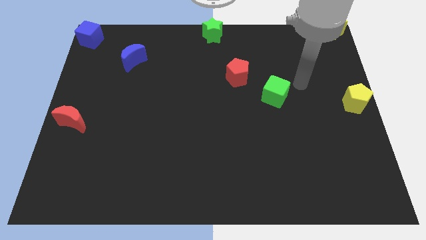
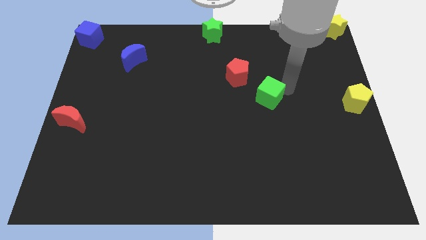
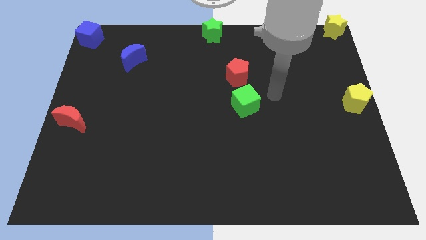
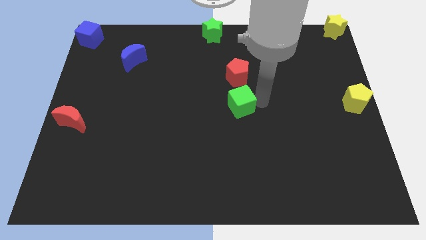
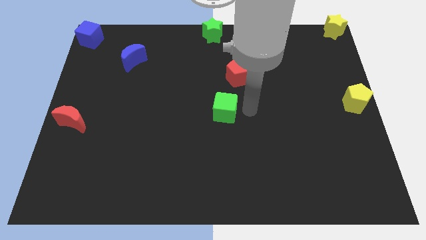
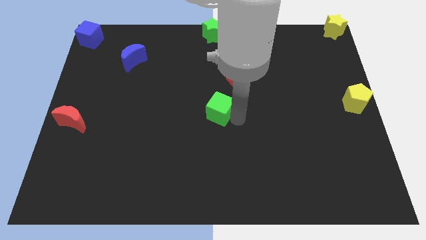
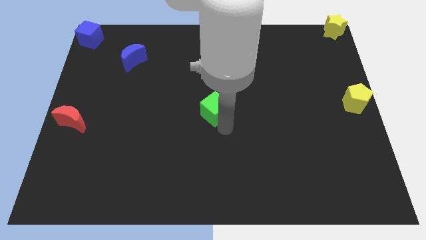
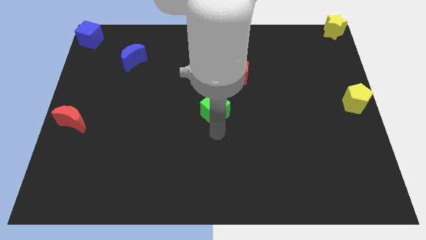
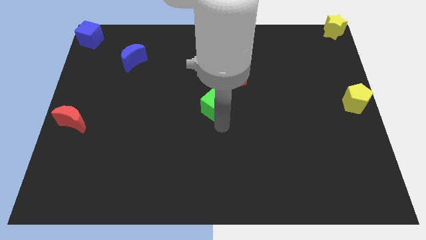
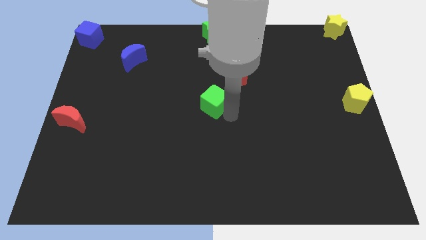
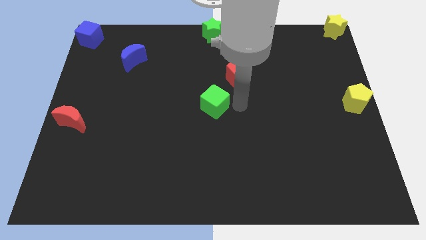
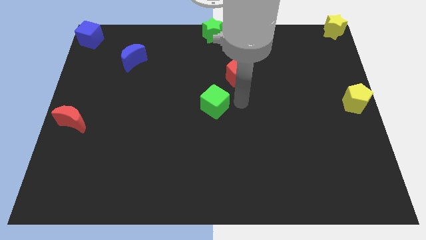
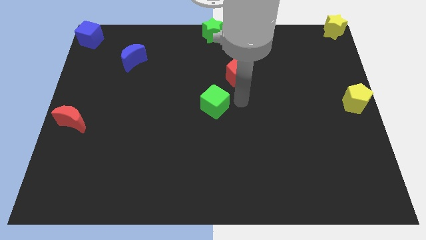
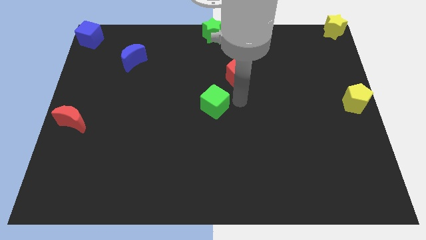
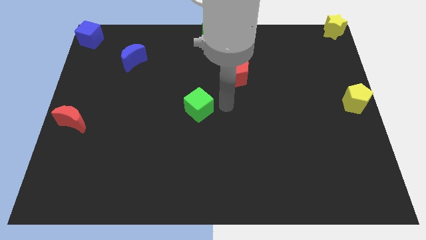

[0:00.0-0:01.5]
drag the green cube vertically to the bottom of the green star

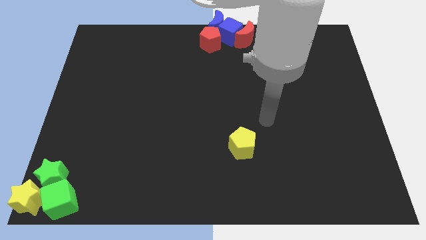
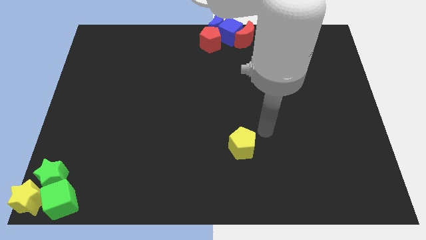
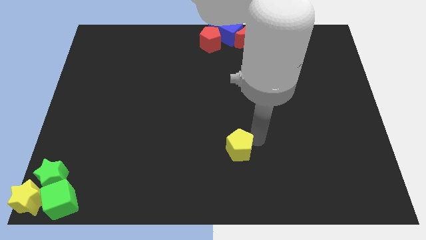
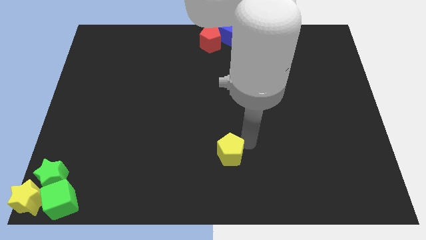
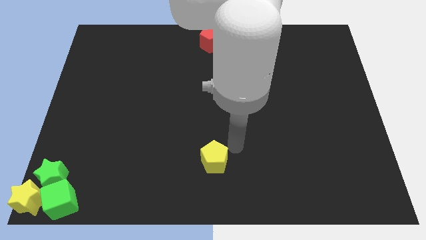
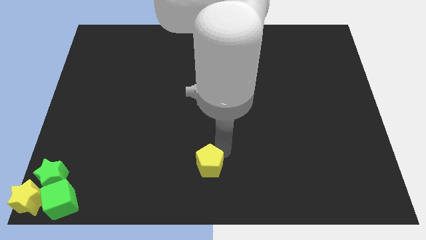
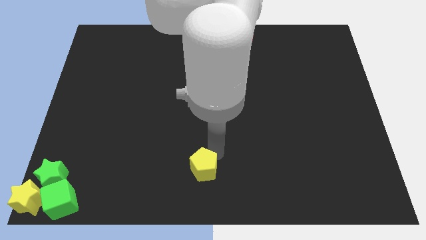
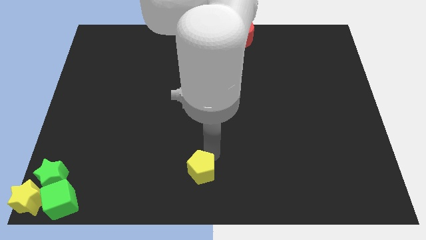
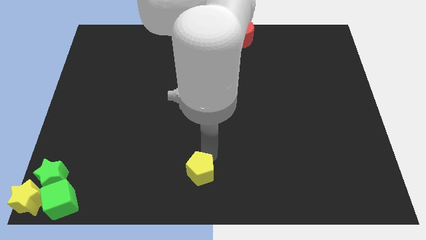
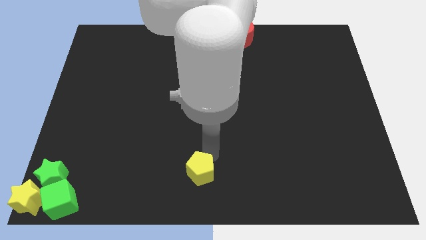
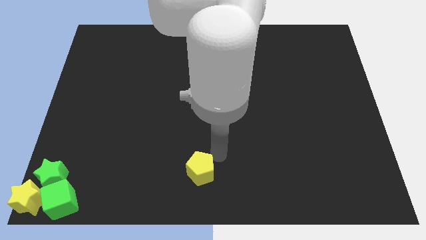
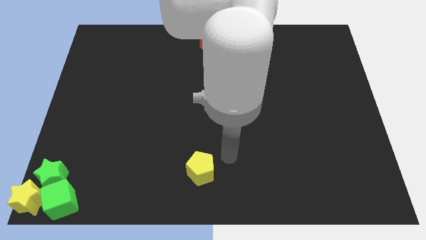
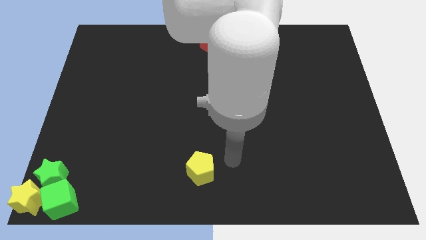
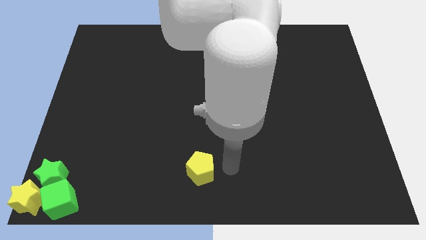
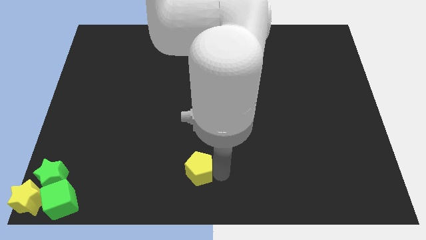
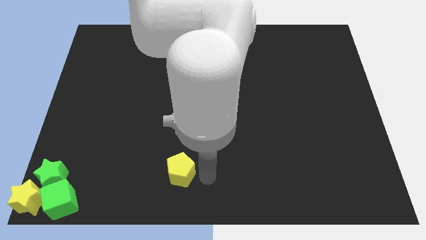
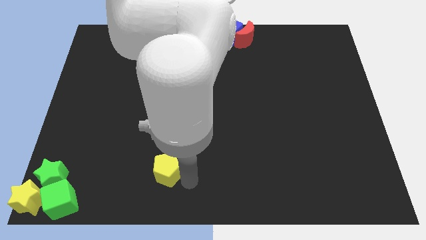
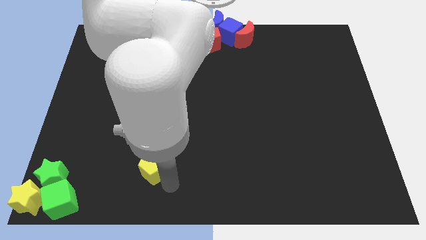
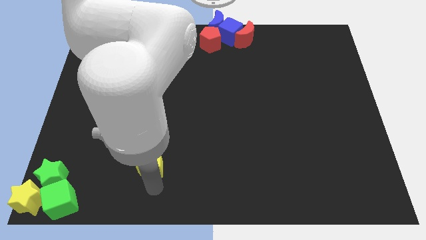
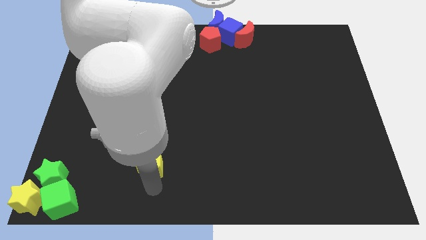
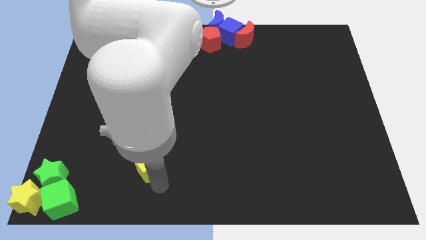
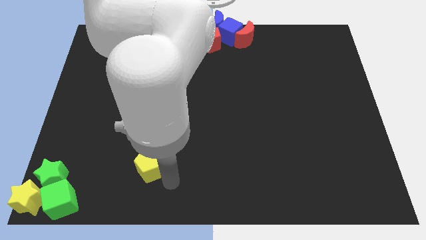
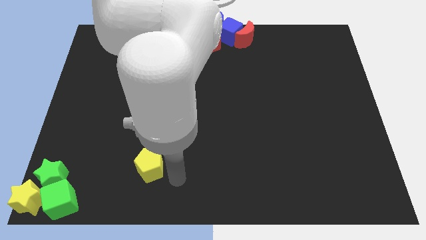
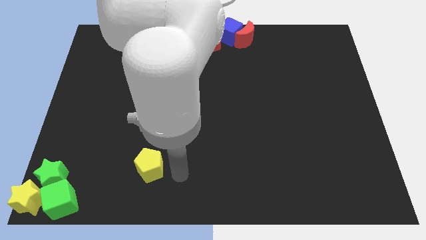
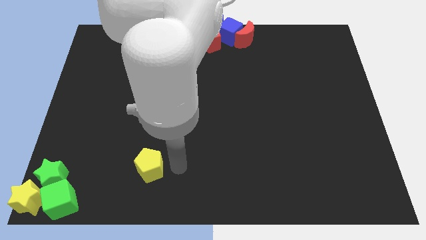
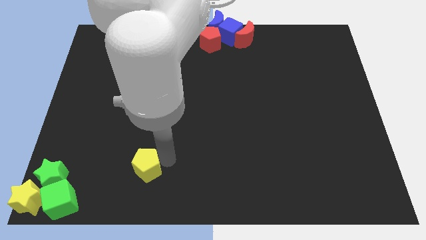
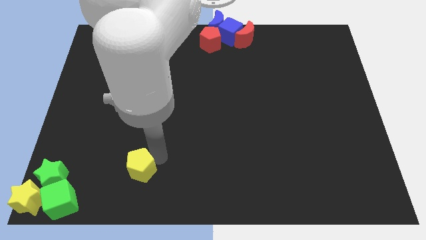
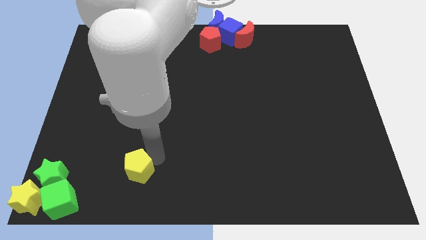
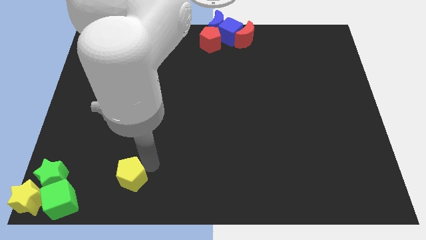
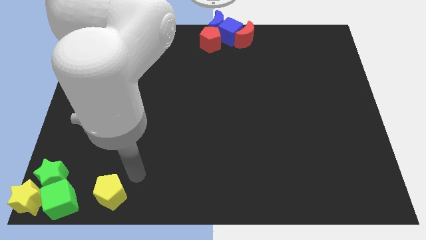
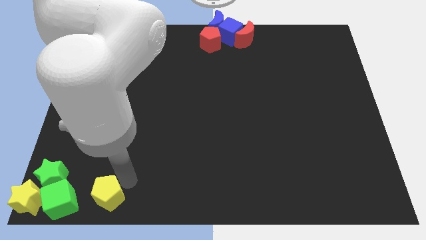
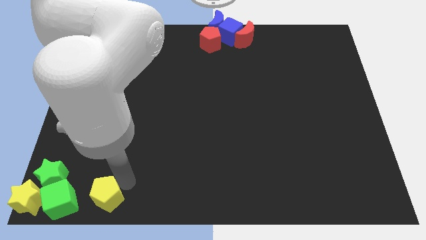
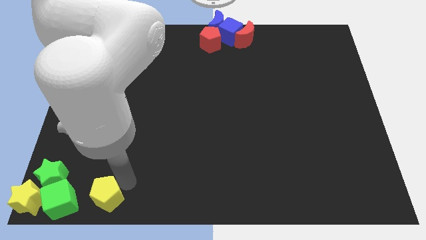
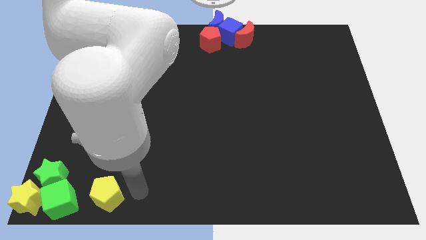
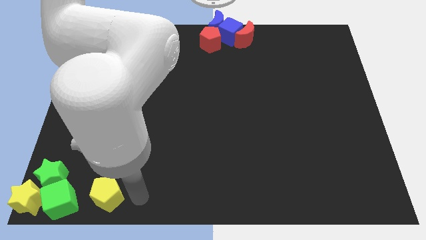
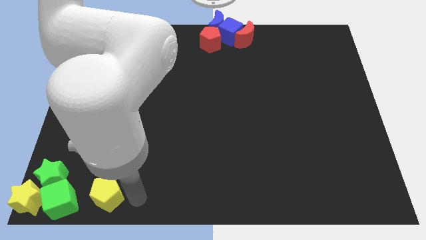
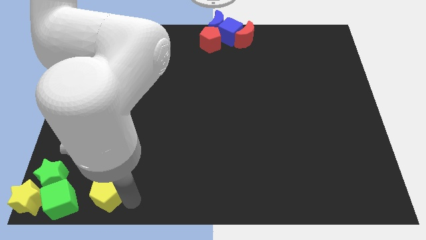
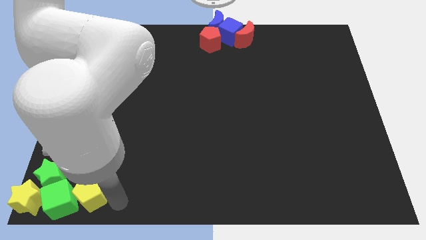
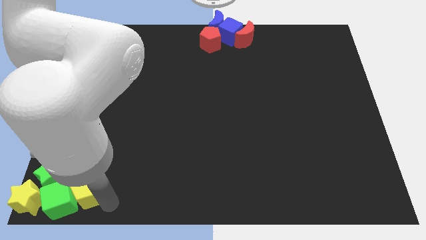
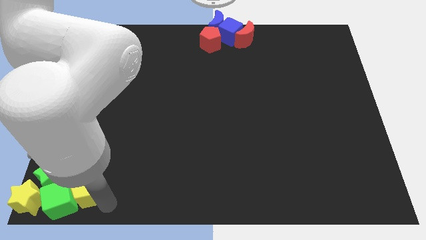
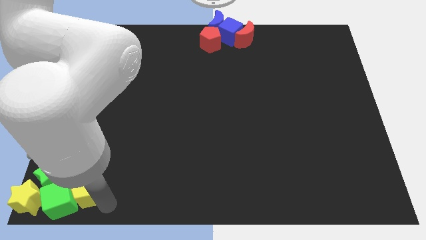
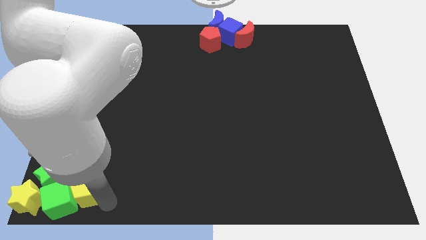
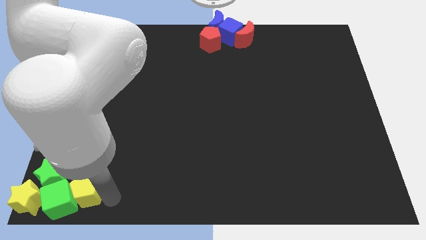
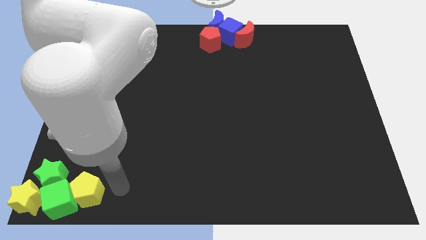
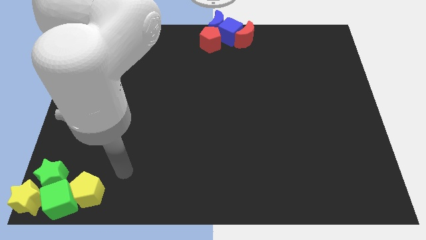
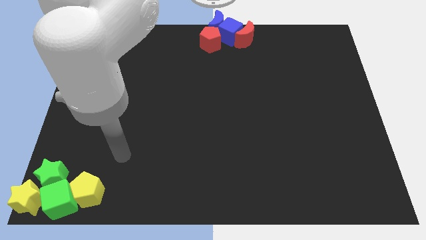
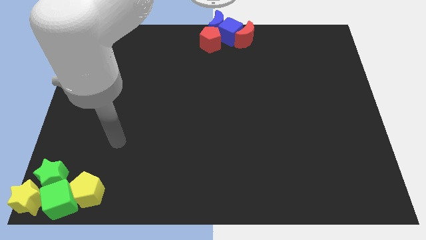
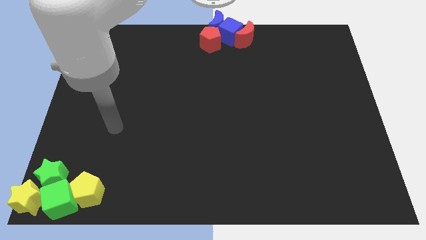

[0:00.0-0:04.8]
push the yellow pentagon to the right of the green cube

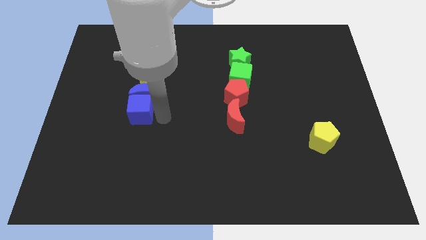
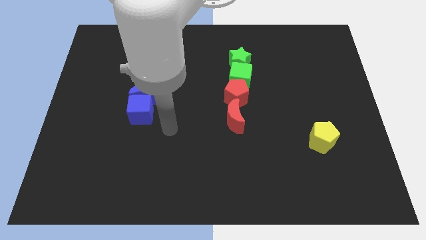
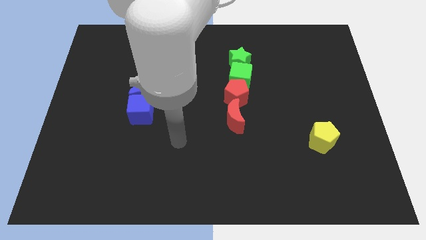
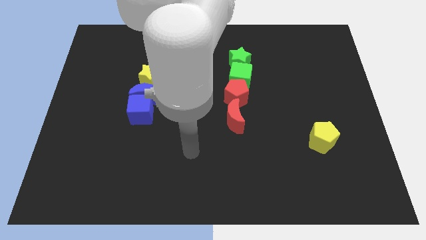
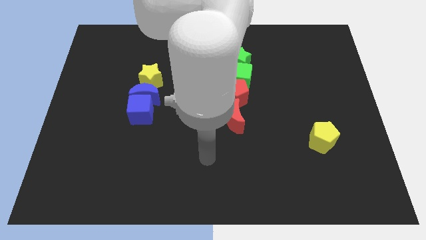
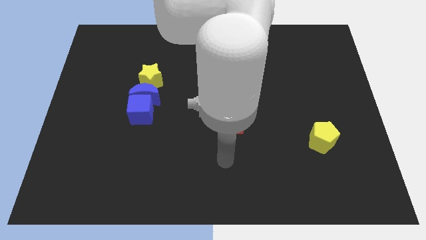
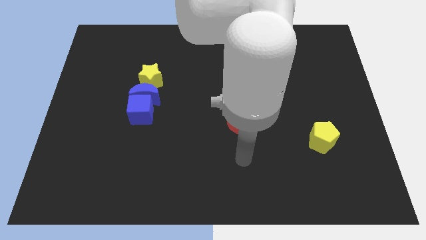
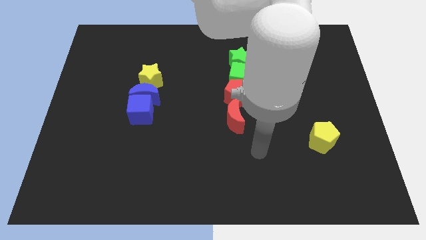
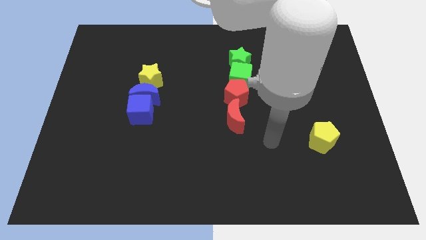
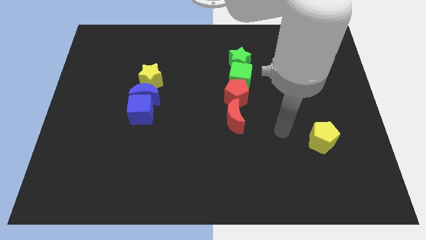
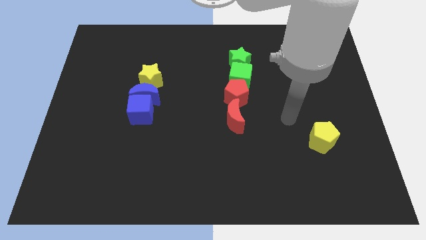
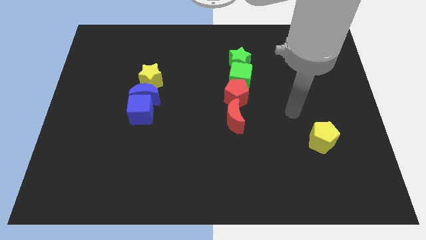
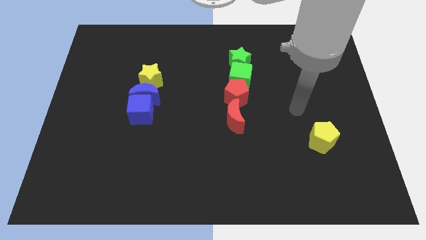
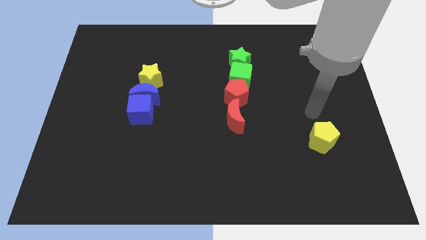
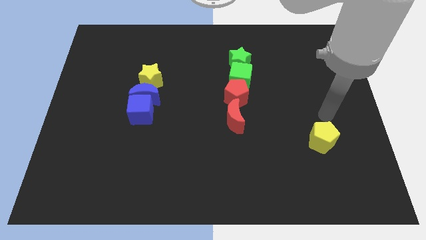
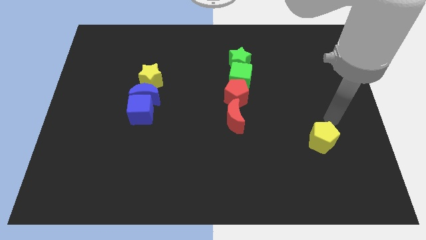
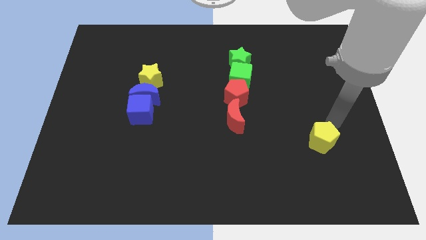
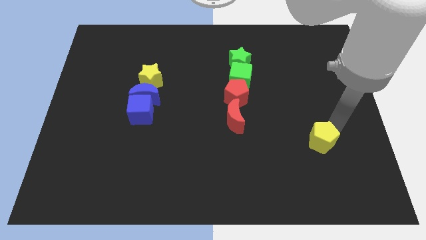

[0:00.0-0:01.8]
point your arm towards yellow pentagon

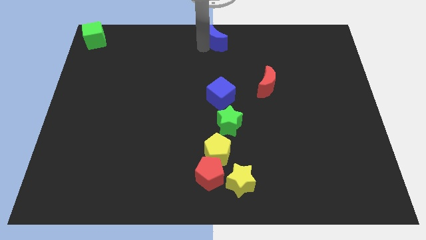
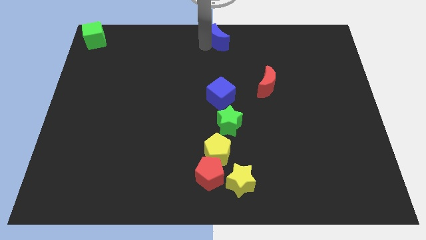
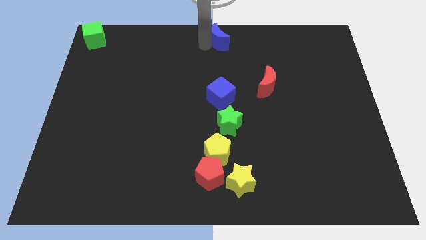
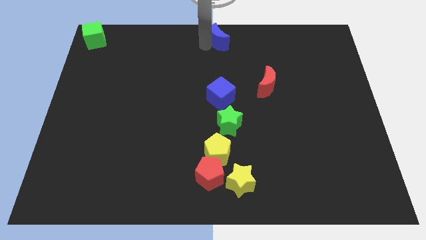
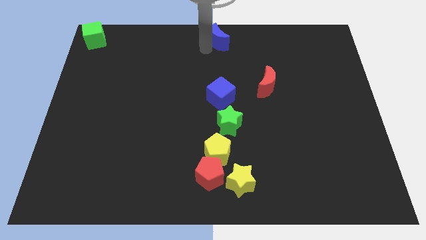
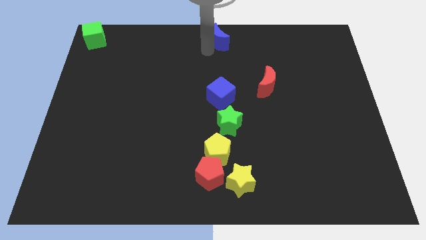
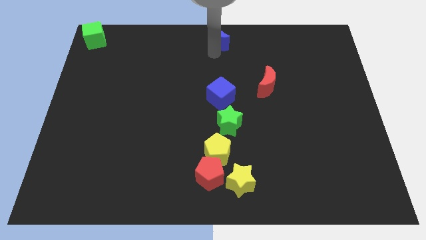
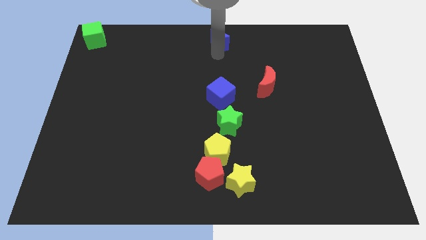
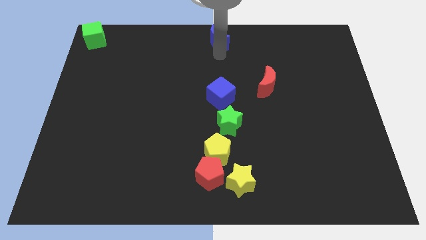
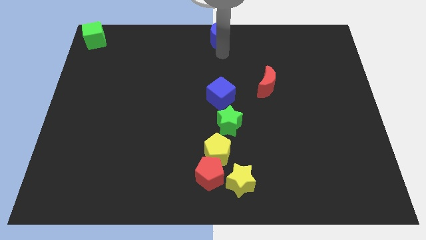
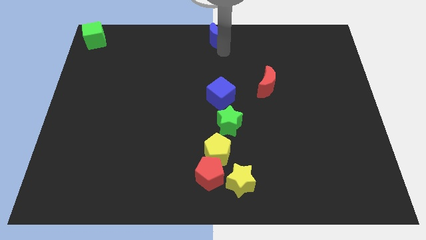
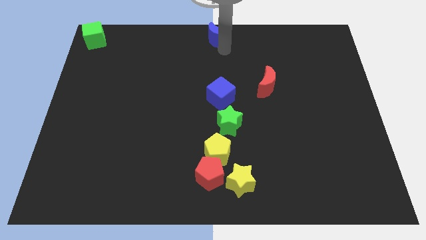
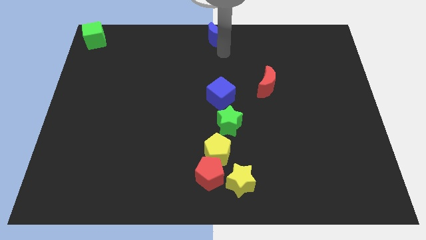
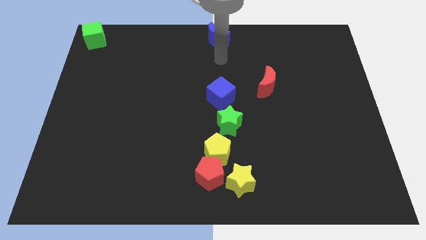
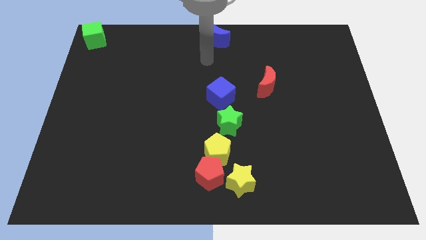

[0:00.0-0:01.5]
move blue crescent vertically above blue cube
